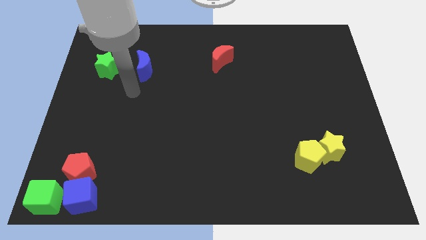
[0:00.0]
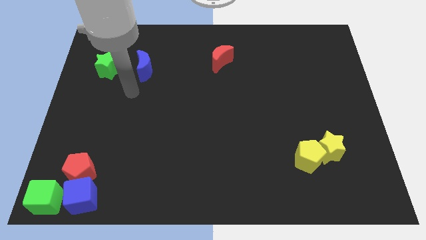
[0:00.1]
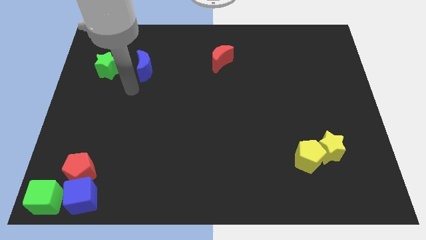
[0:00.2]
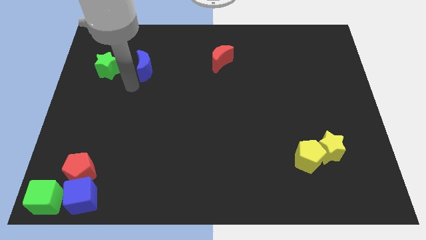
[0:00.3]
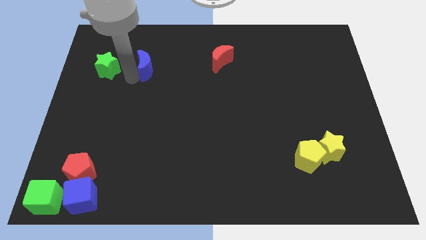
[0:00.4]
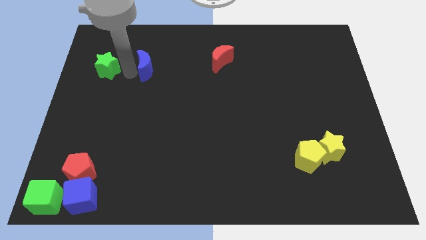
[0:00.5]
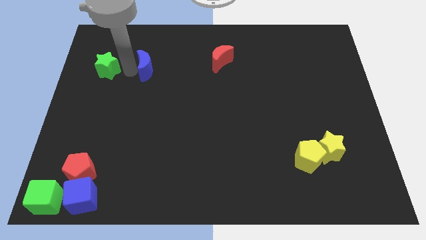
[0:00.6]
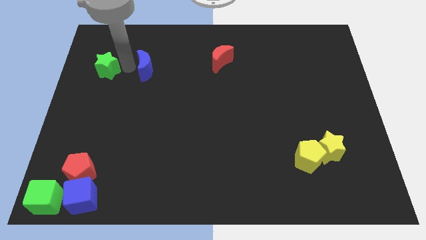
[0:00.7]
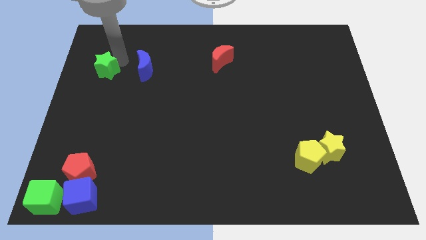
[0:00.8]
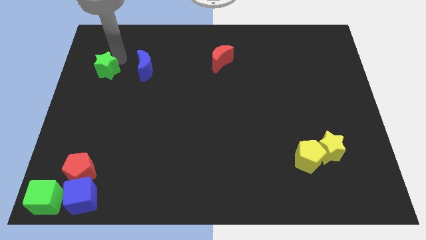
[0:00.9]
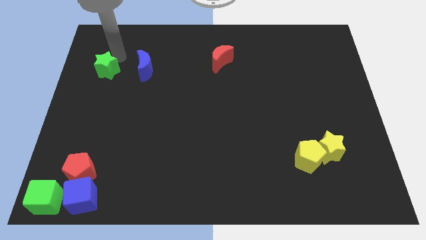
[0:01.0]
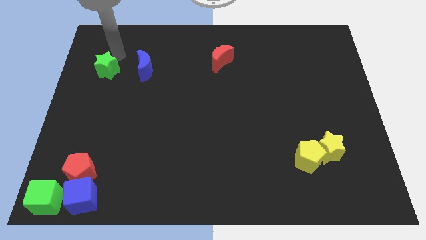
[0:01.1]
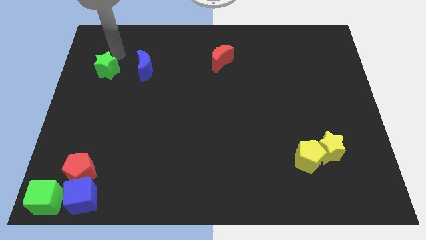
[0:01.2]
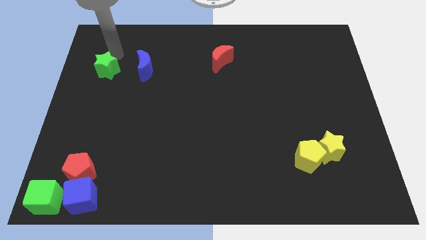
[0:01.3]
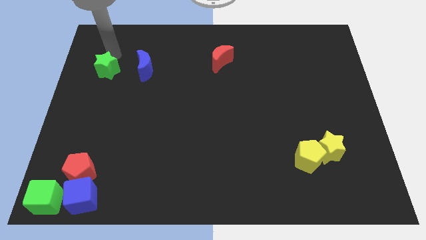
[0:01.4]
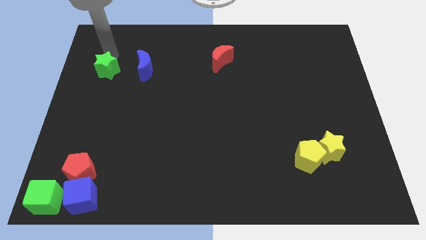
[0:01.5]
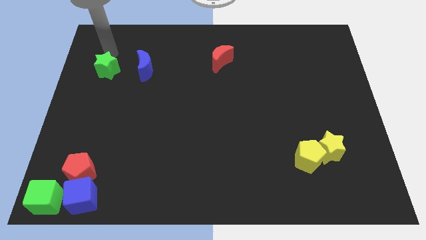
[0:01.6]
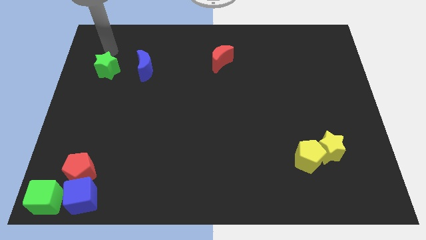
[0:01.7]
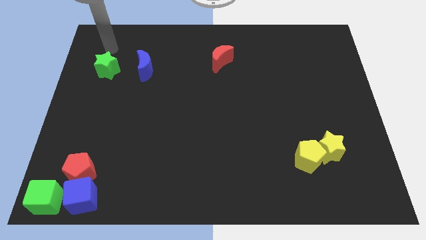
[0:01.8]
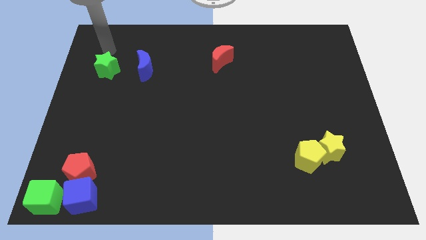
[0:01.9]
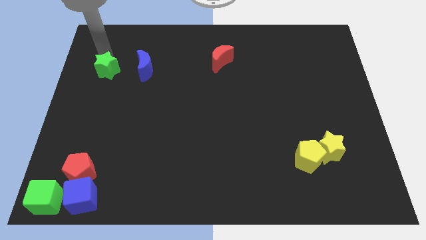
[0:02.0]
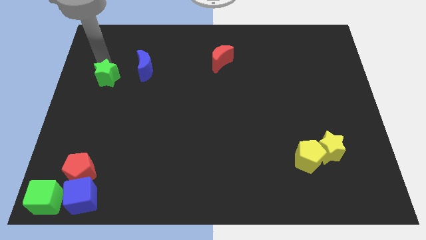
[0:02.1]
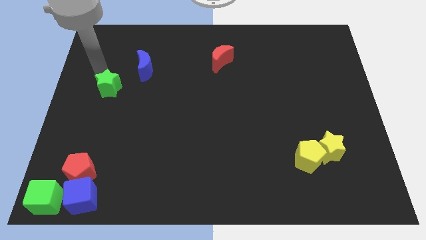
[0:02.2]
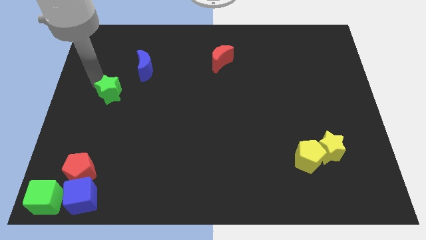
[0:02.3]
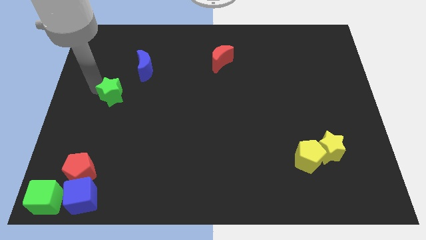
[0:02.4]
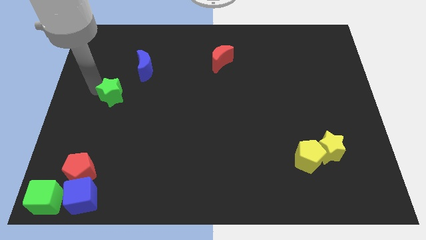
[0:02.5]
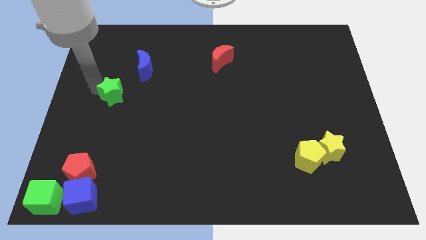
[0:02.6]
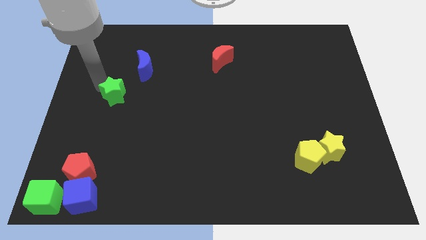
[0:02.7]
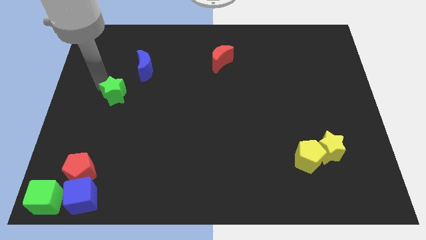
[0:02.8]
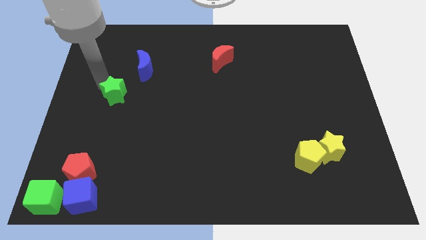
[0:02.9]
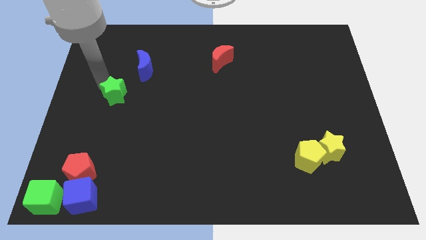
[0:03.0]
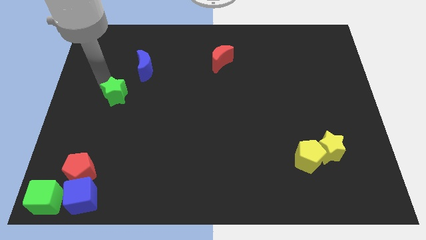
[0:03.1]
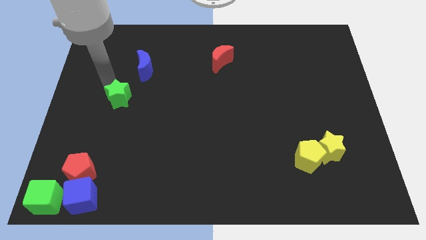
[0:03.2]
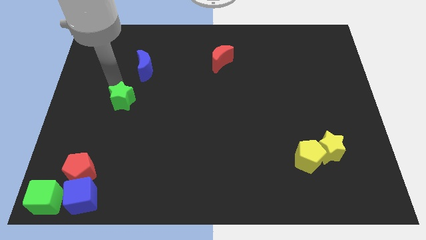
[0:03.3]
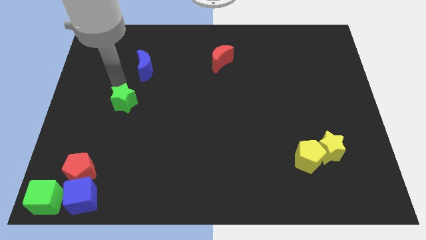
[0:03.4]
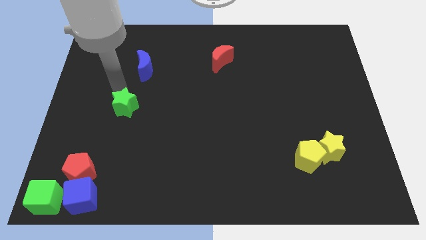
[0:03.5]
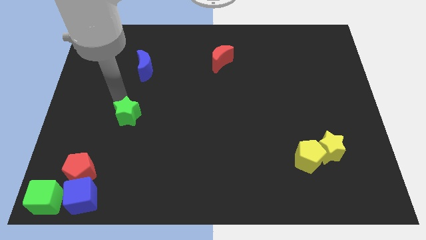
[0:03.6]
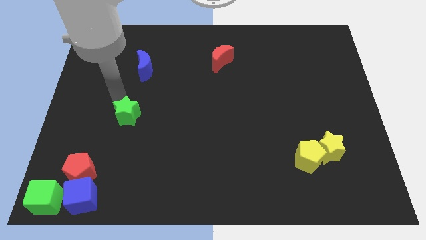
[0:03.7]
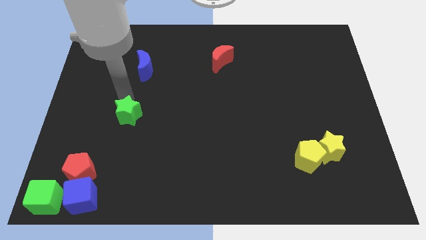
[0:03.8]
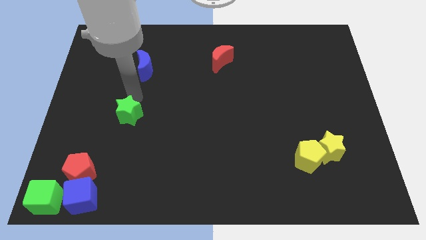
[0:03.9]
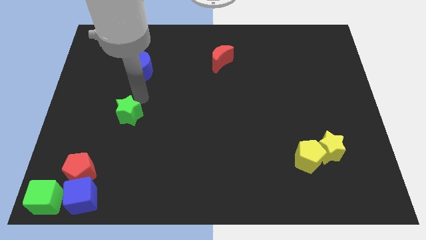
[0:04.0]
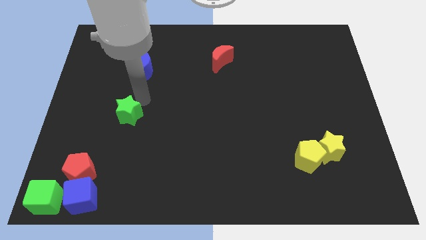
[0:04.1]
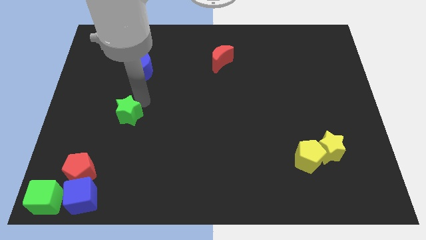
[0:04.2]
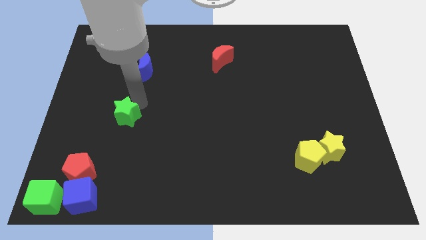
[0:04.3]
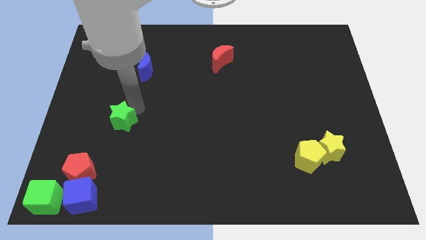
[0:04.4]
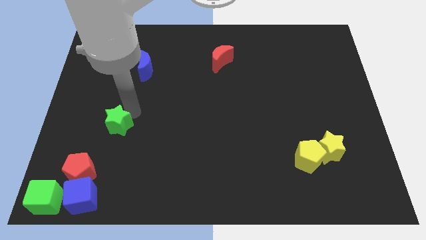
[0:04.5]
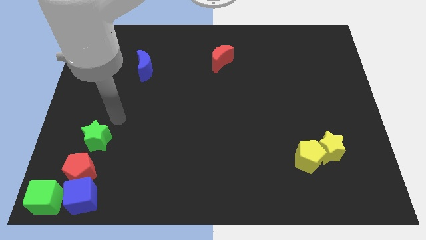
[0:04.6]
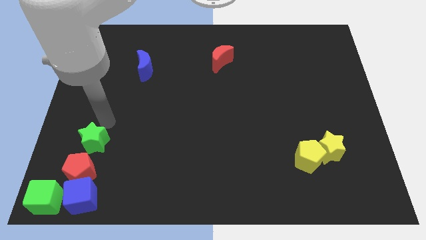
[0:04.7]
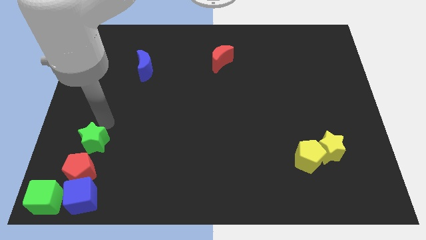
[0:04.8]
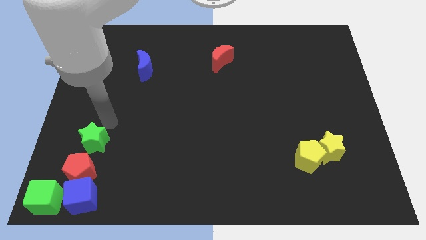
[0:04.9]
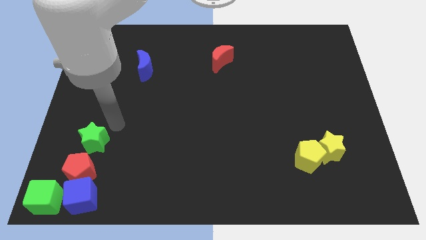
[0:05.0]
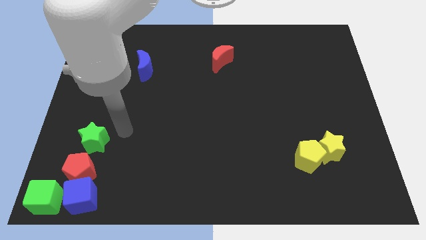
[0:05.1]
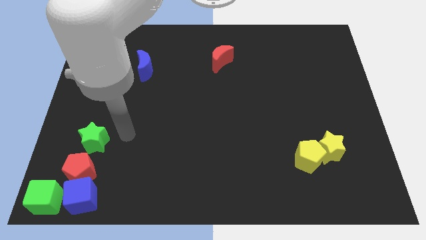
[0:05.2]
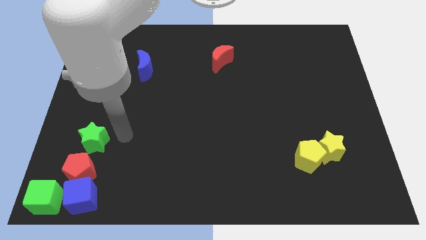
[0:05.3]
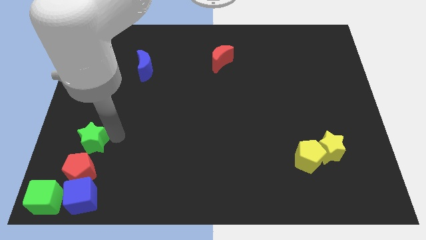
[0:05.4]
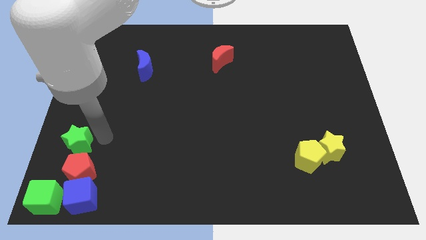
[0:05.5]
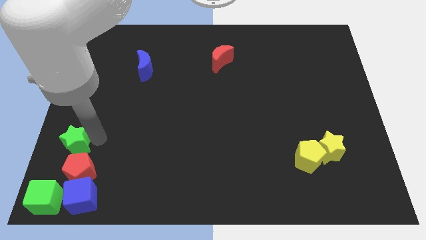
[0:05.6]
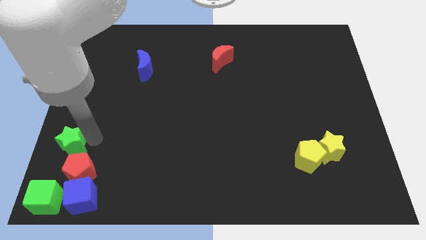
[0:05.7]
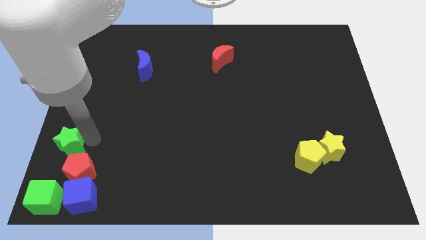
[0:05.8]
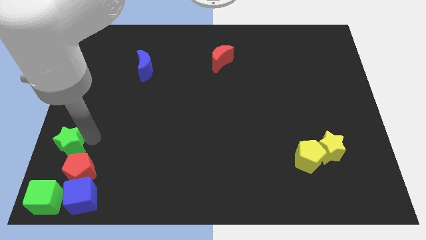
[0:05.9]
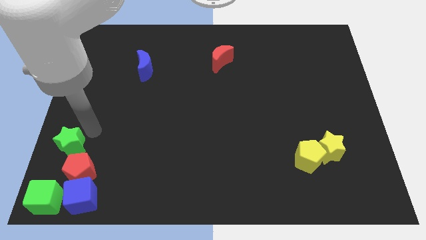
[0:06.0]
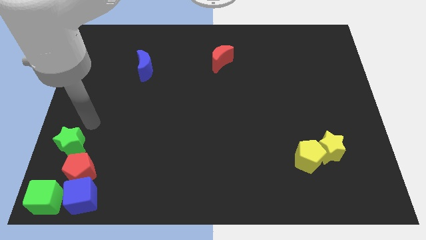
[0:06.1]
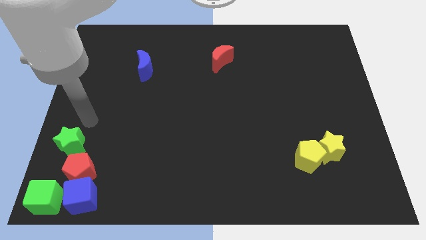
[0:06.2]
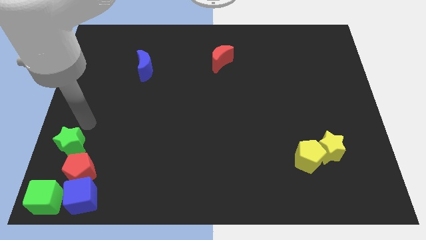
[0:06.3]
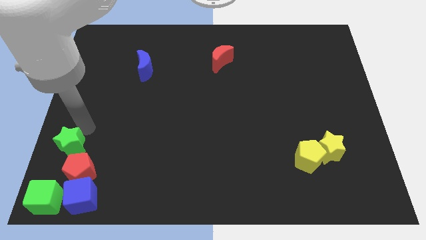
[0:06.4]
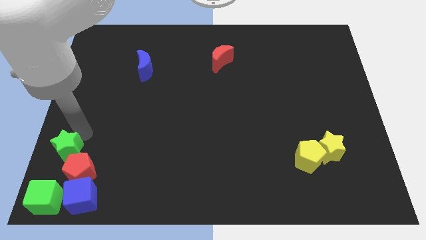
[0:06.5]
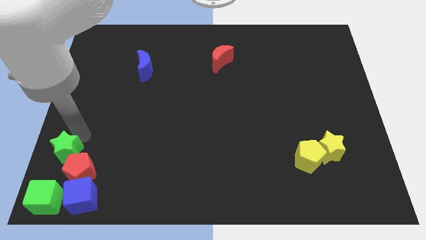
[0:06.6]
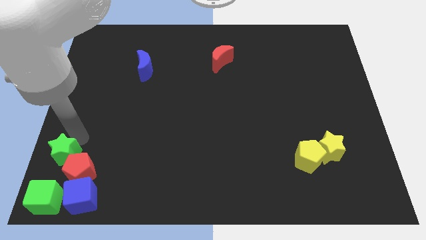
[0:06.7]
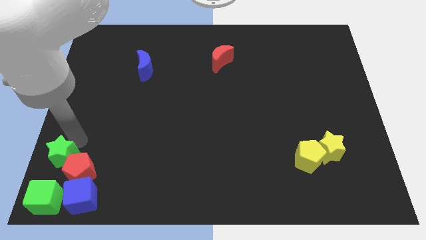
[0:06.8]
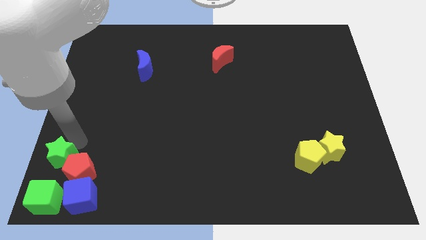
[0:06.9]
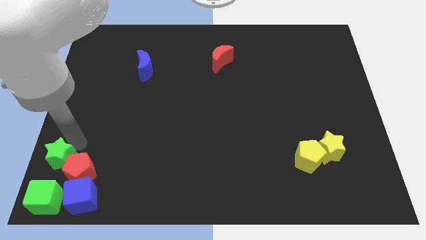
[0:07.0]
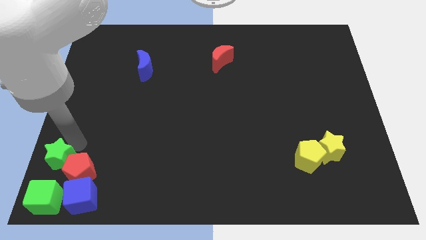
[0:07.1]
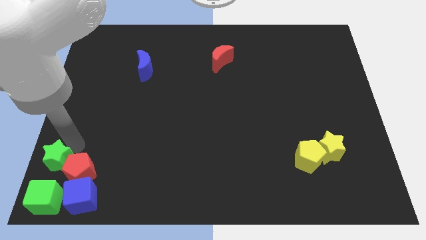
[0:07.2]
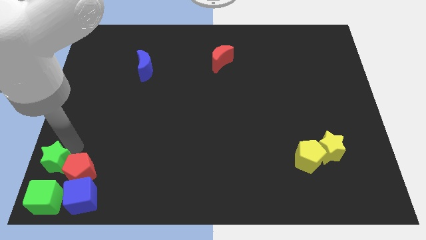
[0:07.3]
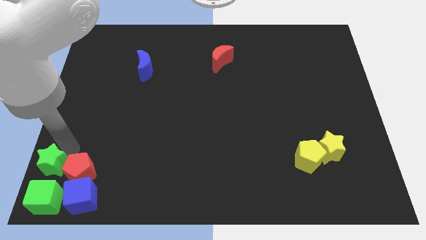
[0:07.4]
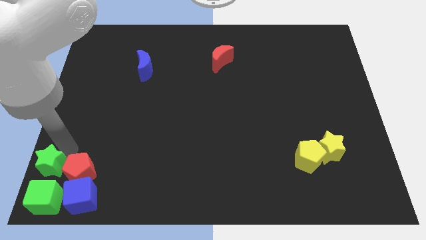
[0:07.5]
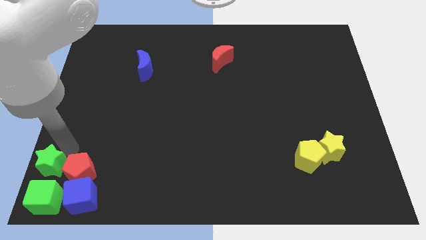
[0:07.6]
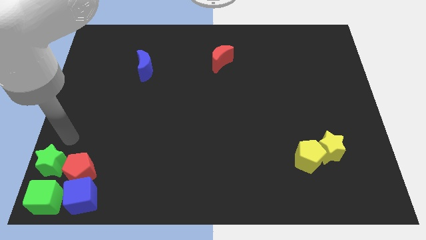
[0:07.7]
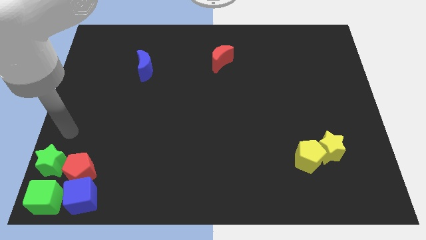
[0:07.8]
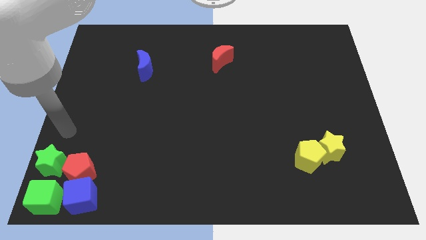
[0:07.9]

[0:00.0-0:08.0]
place the green star to the left of the red pentagon

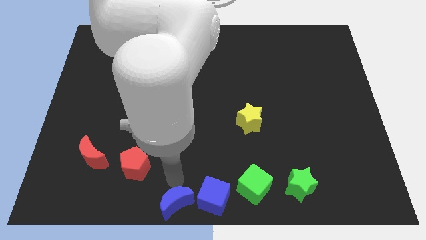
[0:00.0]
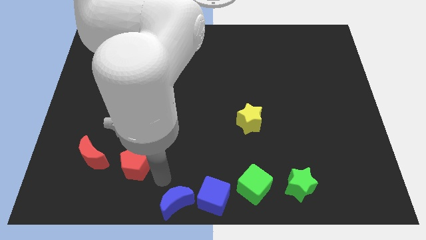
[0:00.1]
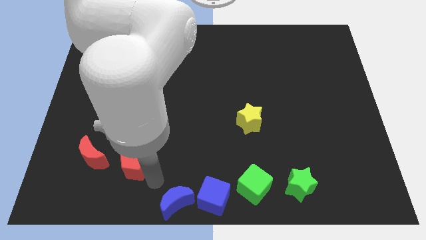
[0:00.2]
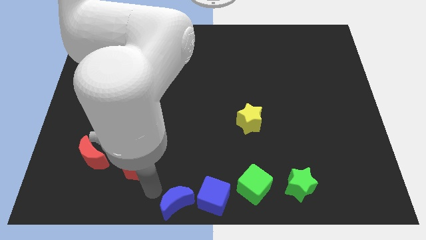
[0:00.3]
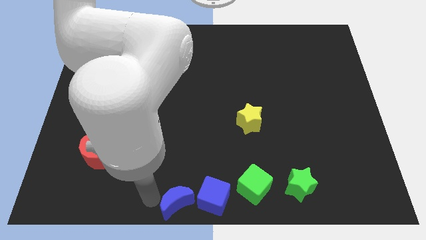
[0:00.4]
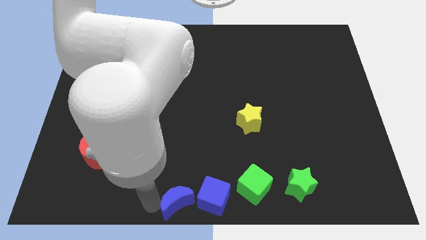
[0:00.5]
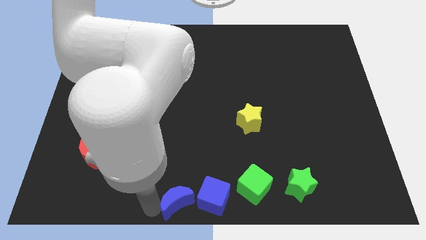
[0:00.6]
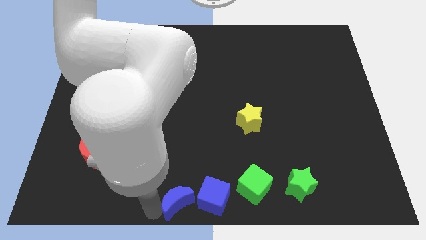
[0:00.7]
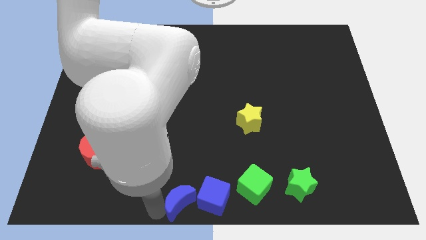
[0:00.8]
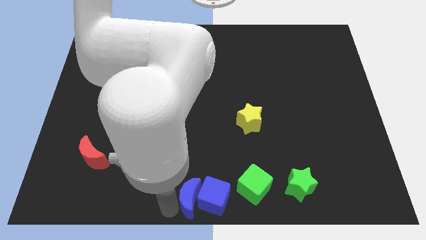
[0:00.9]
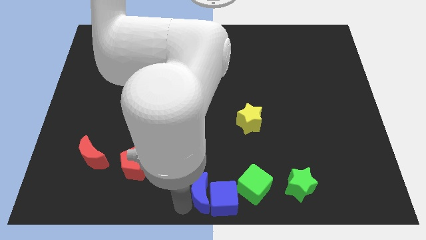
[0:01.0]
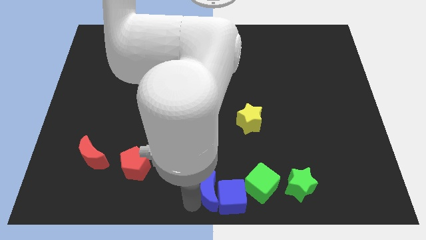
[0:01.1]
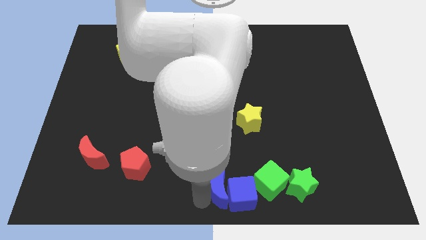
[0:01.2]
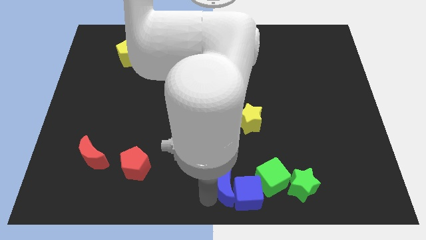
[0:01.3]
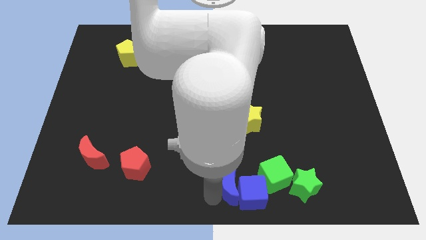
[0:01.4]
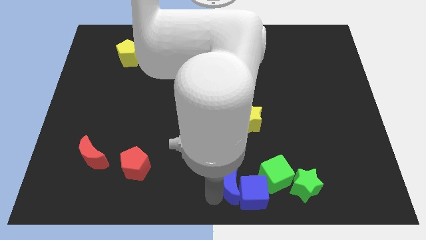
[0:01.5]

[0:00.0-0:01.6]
push the blue cube and green cube into the green star with the blue moon
